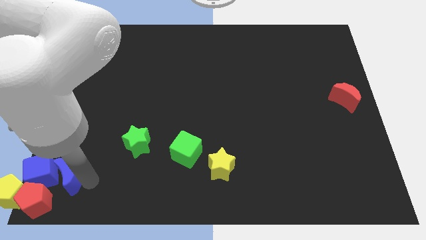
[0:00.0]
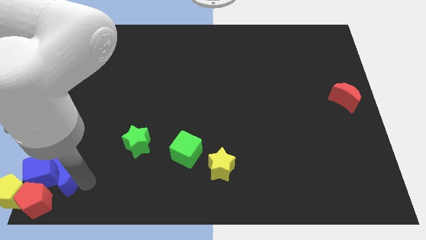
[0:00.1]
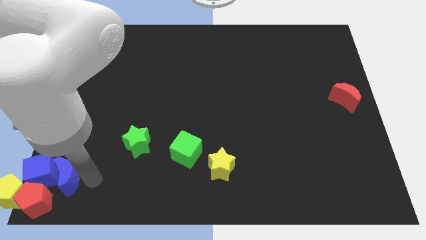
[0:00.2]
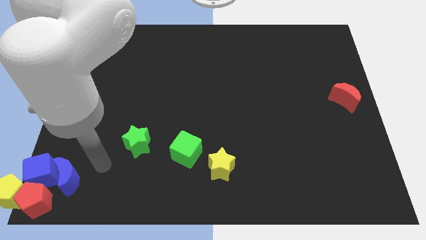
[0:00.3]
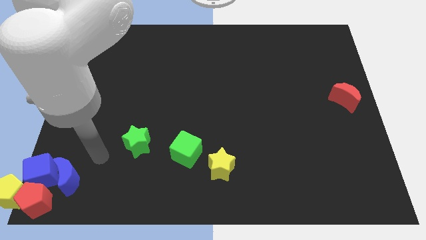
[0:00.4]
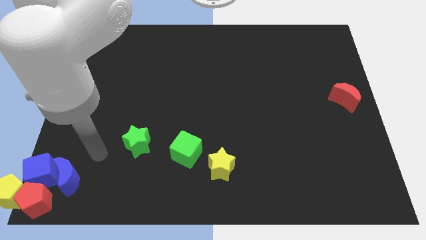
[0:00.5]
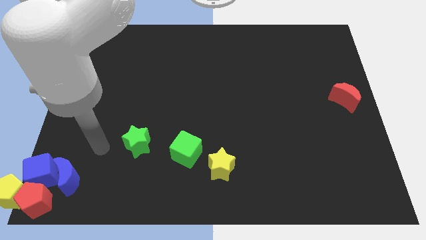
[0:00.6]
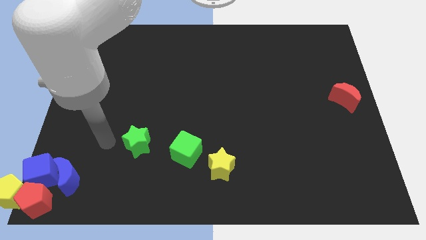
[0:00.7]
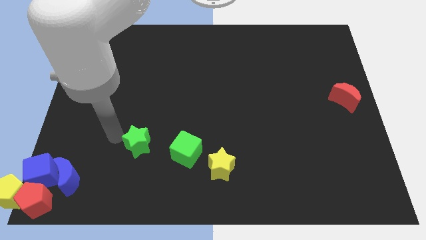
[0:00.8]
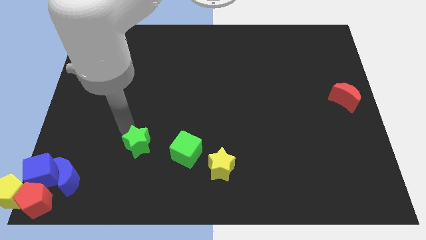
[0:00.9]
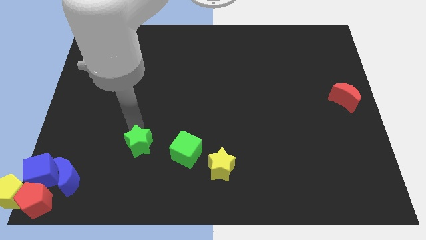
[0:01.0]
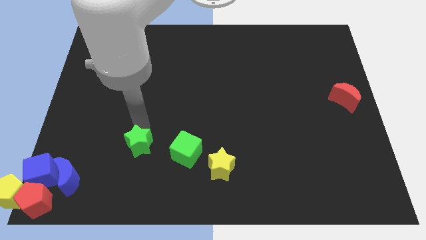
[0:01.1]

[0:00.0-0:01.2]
place the arm above the green star

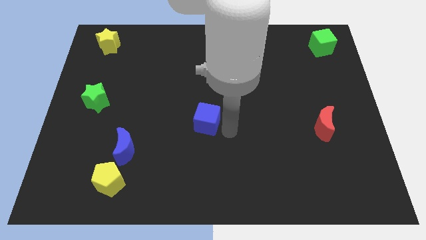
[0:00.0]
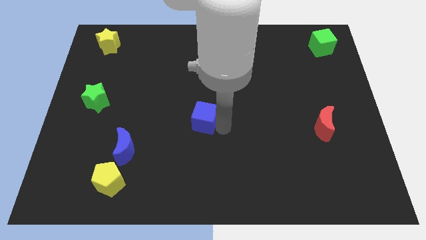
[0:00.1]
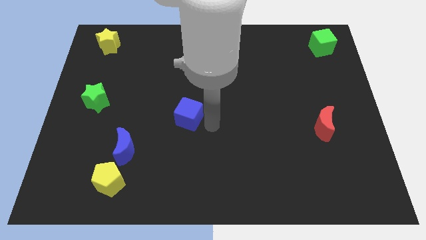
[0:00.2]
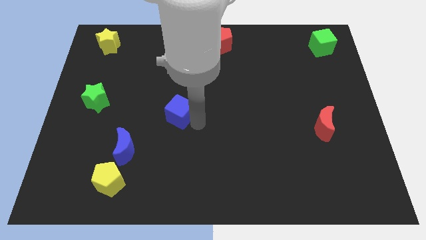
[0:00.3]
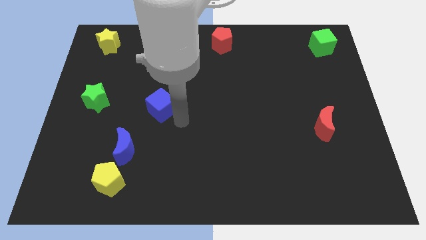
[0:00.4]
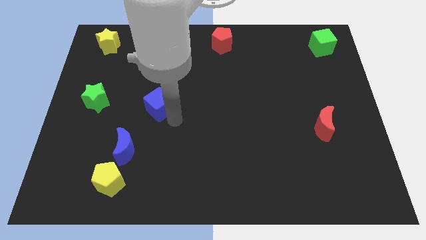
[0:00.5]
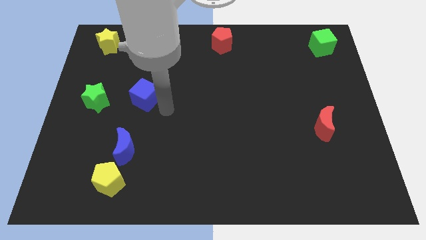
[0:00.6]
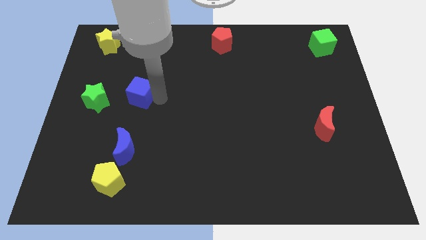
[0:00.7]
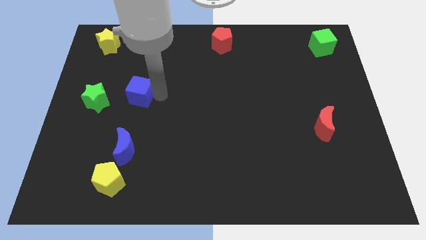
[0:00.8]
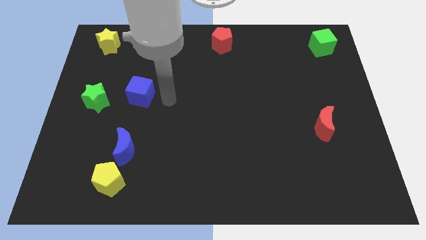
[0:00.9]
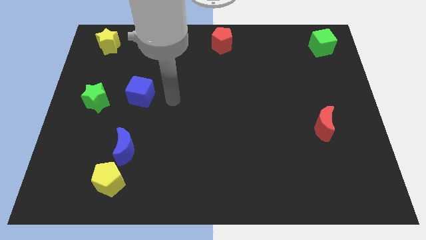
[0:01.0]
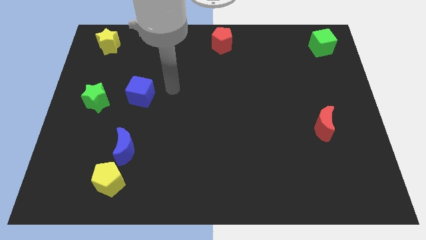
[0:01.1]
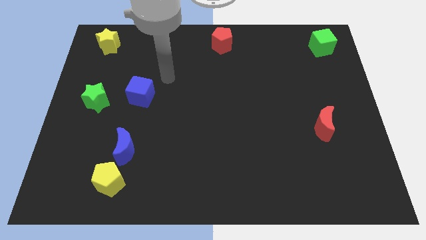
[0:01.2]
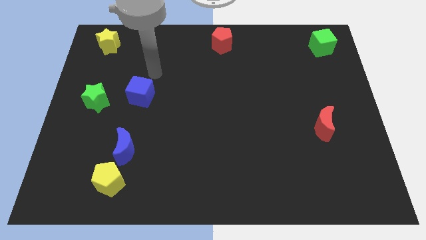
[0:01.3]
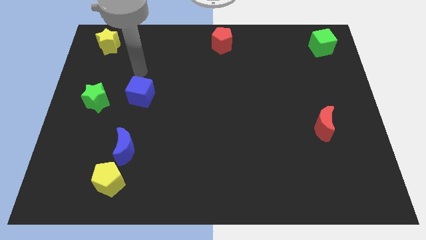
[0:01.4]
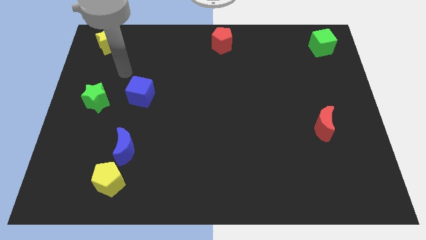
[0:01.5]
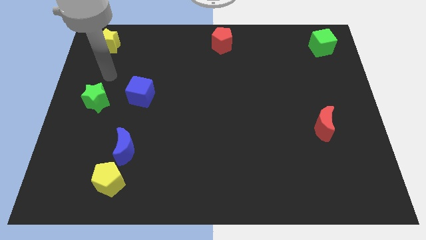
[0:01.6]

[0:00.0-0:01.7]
place the blue cube right side to the green star

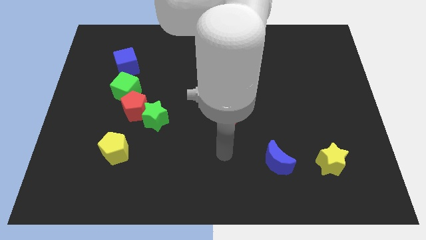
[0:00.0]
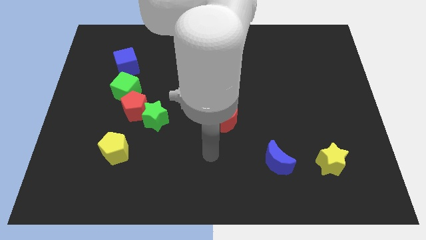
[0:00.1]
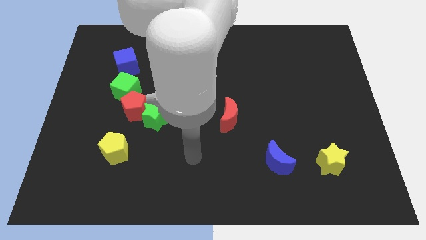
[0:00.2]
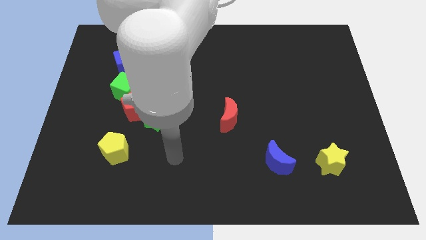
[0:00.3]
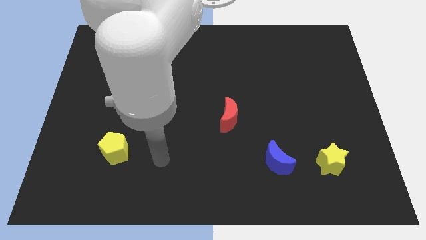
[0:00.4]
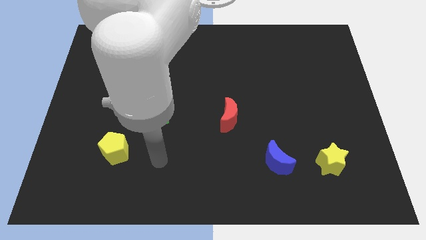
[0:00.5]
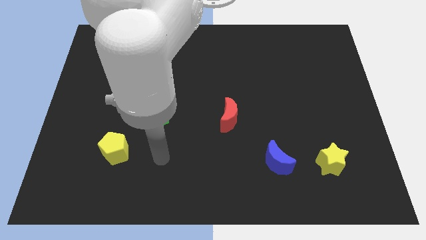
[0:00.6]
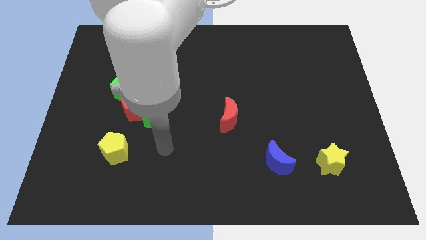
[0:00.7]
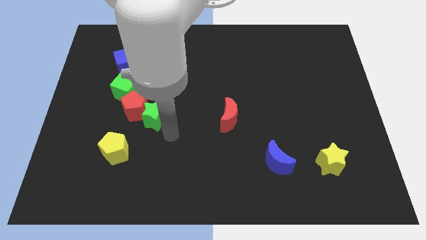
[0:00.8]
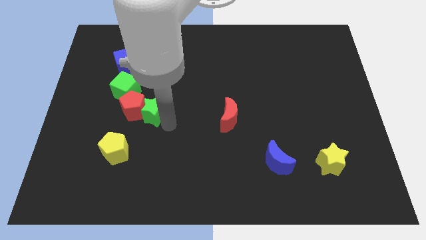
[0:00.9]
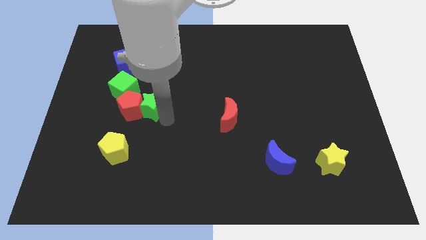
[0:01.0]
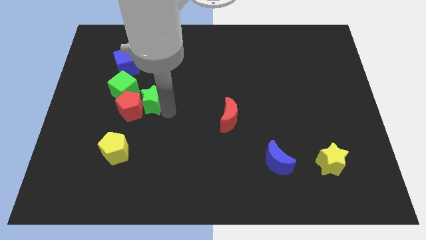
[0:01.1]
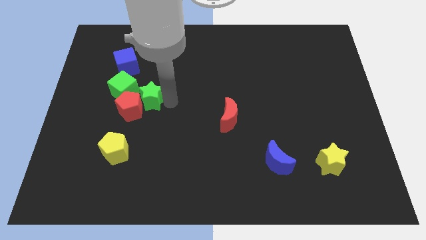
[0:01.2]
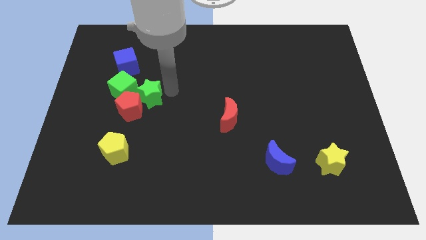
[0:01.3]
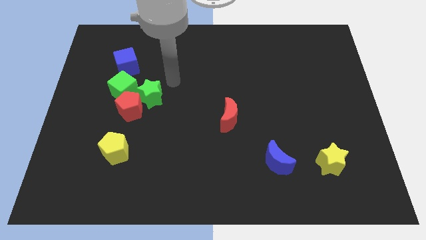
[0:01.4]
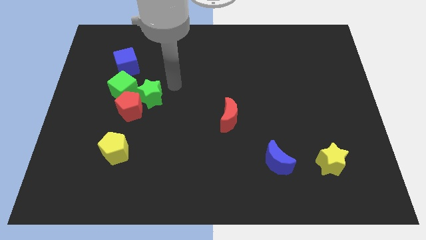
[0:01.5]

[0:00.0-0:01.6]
move the green star towards the top side

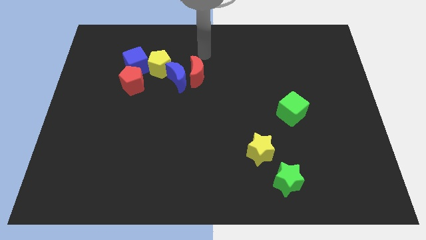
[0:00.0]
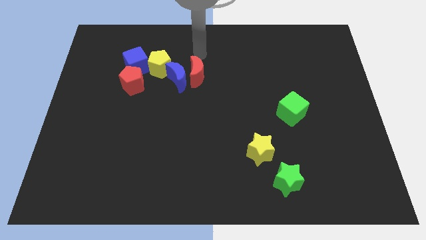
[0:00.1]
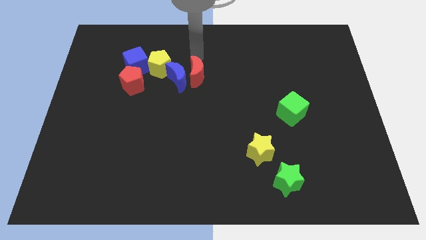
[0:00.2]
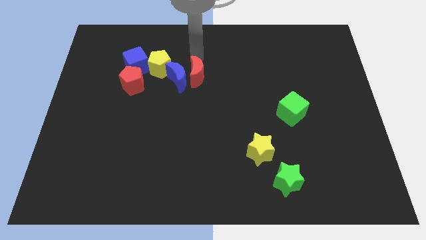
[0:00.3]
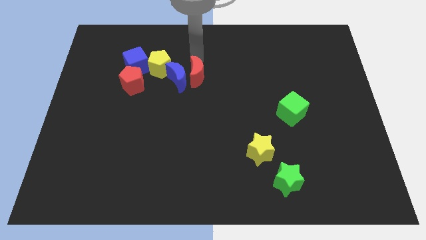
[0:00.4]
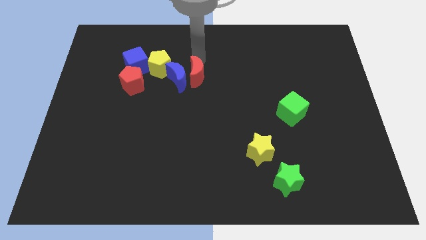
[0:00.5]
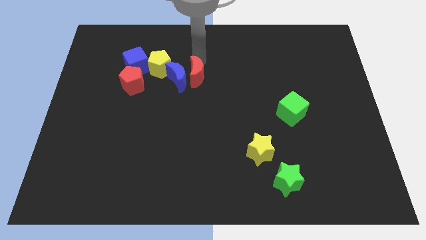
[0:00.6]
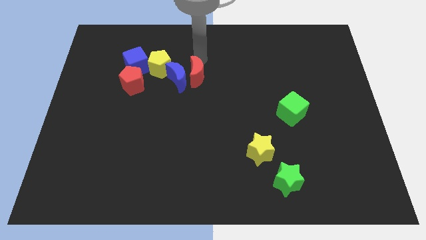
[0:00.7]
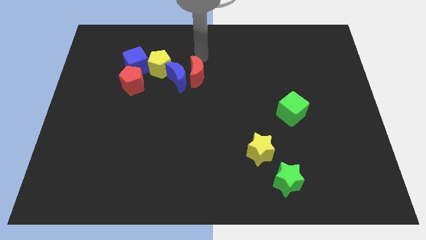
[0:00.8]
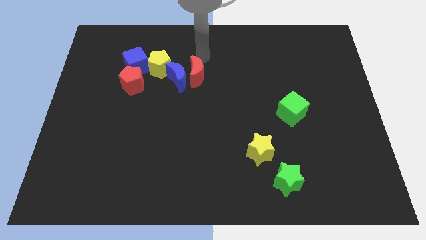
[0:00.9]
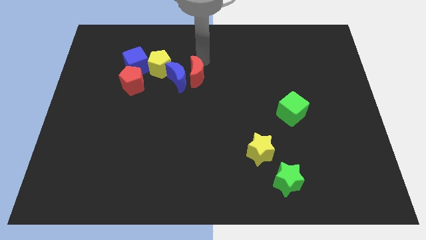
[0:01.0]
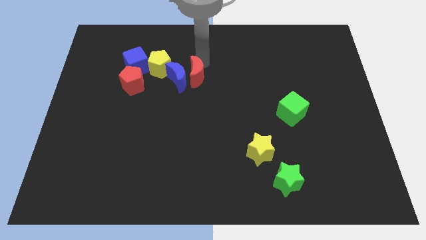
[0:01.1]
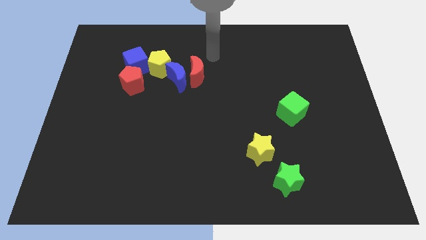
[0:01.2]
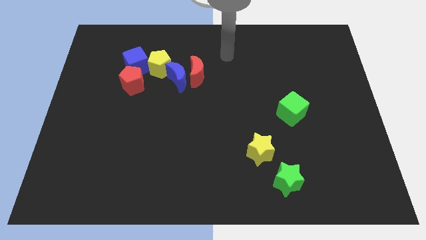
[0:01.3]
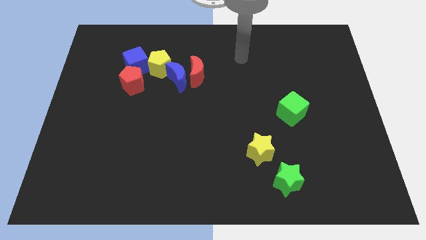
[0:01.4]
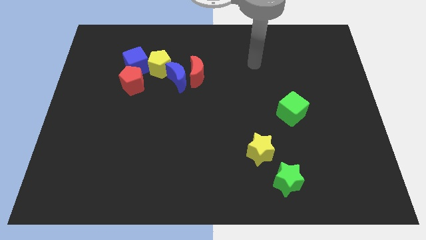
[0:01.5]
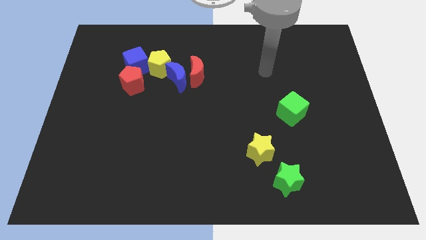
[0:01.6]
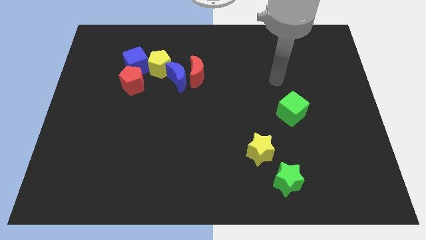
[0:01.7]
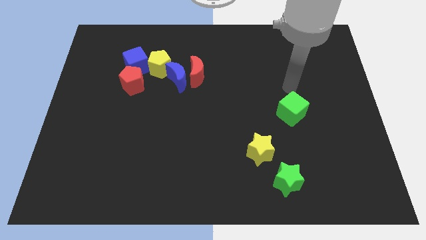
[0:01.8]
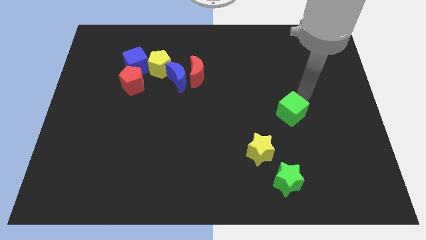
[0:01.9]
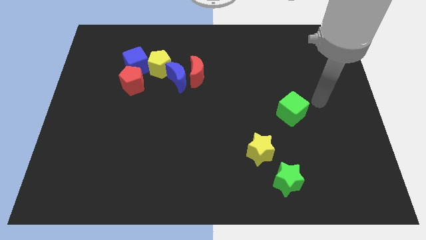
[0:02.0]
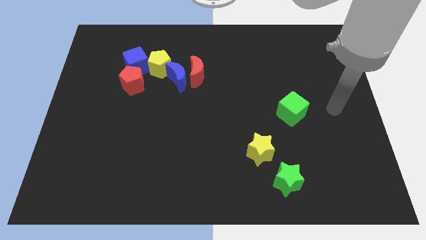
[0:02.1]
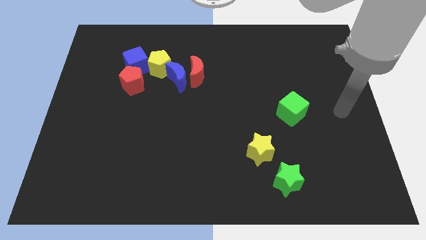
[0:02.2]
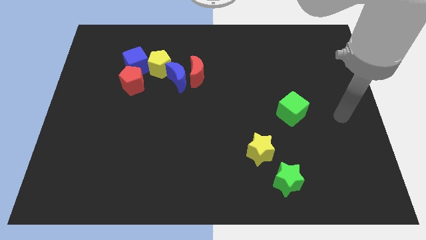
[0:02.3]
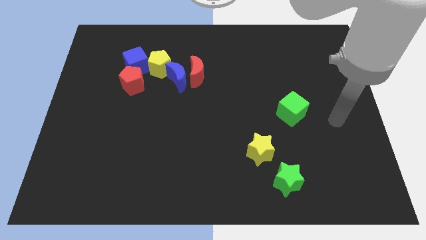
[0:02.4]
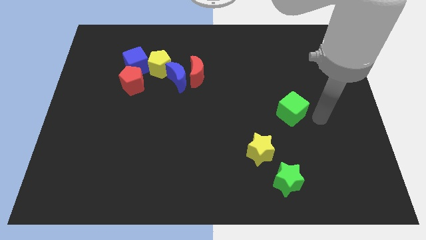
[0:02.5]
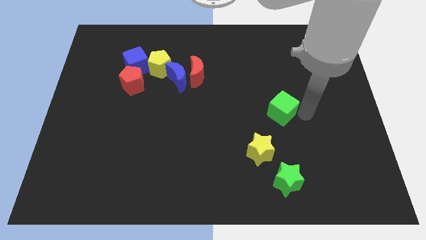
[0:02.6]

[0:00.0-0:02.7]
place the arm right to the green cube

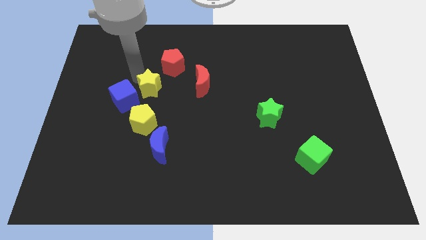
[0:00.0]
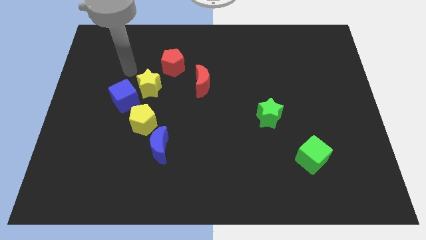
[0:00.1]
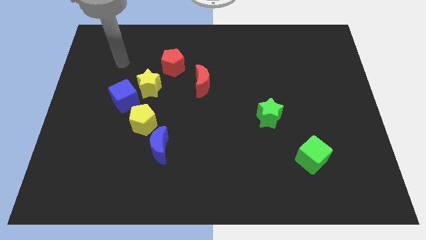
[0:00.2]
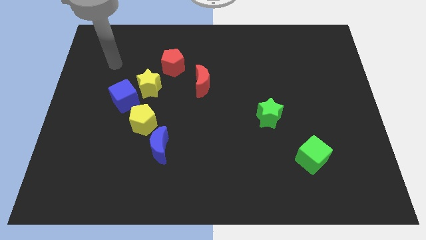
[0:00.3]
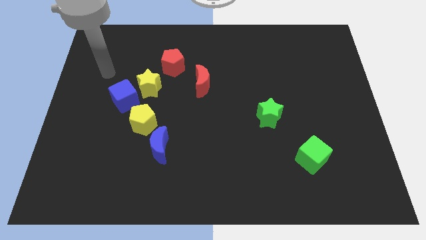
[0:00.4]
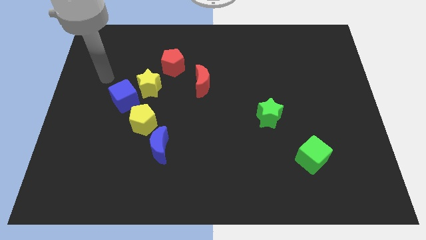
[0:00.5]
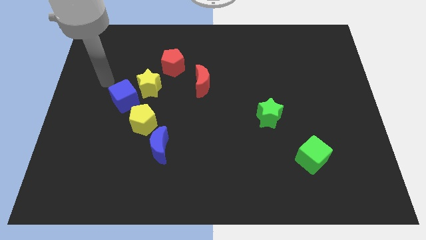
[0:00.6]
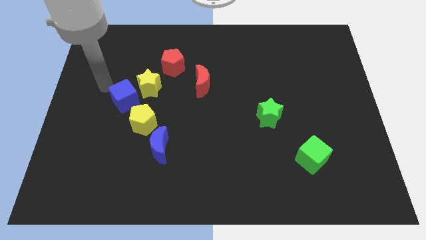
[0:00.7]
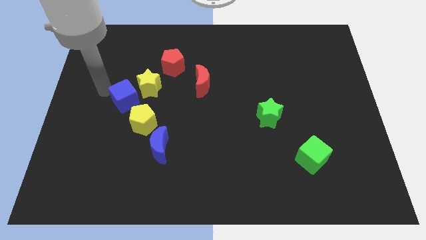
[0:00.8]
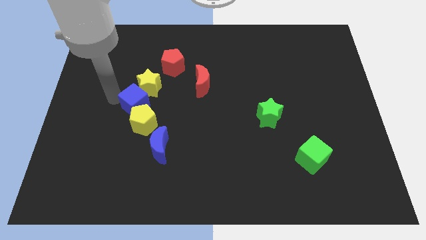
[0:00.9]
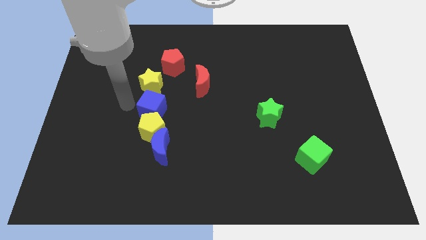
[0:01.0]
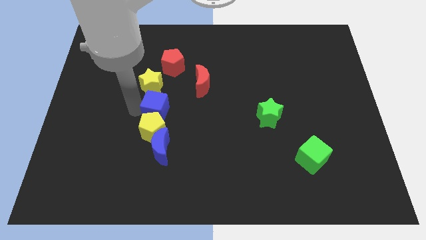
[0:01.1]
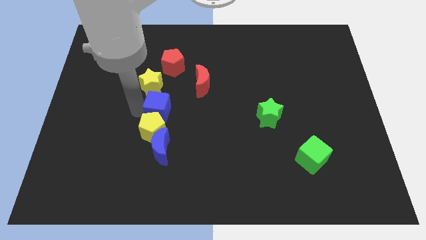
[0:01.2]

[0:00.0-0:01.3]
place blue cube below yellow star

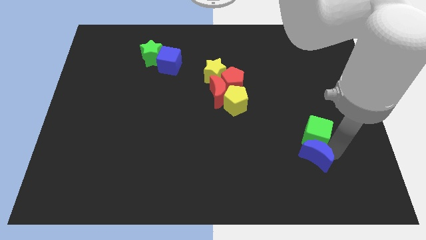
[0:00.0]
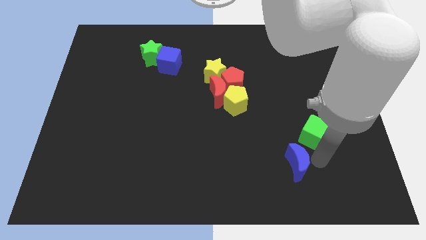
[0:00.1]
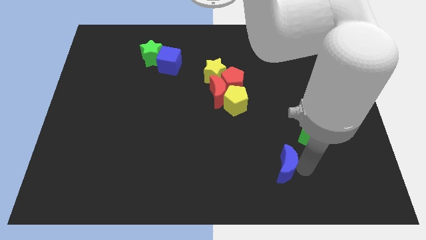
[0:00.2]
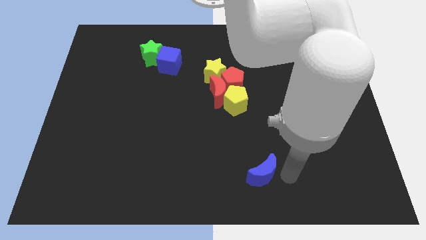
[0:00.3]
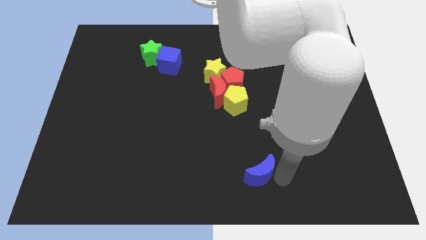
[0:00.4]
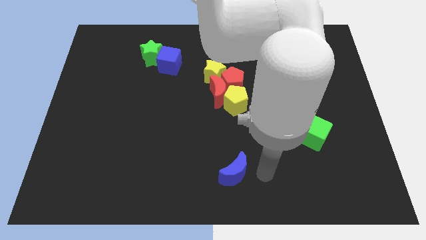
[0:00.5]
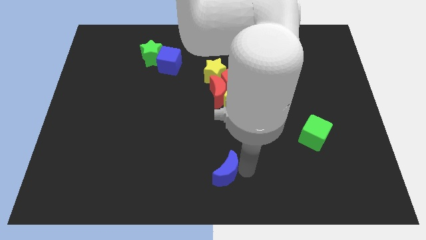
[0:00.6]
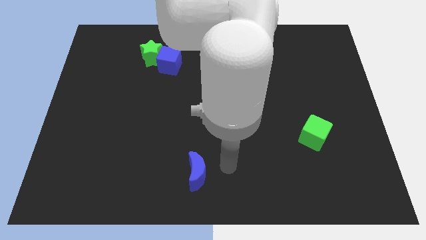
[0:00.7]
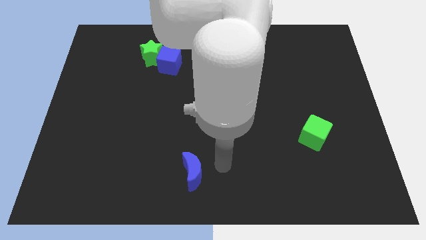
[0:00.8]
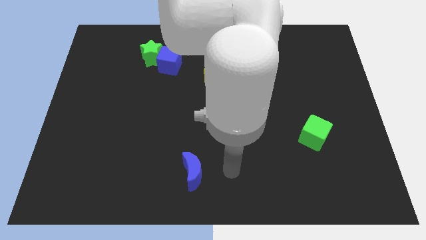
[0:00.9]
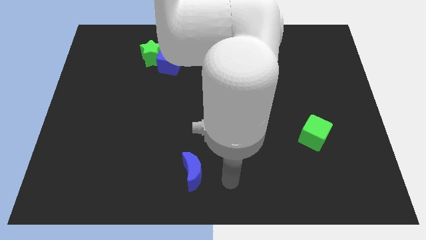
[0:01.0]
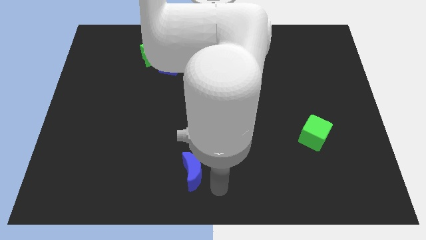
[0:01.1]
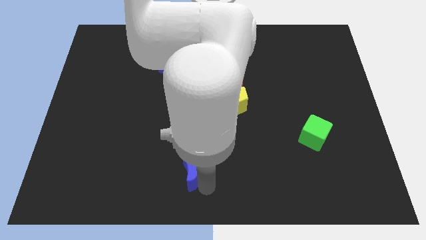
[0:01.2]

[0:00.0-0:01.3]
push the blue moon towards the top left
